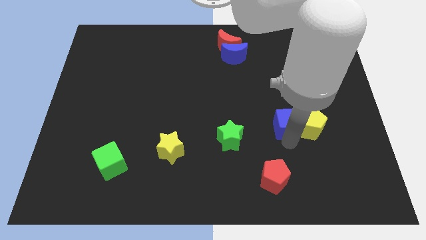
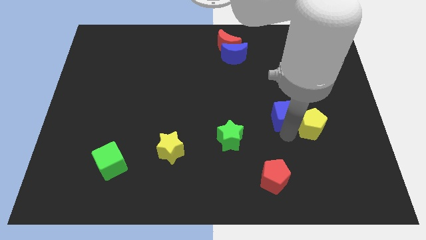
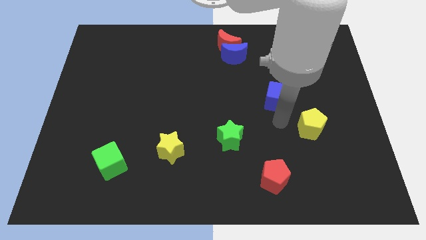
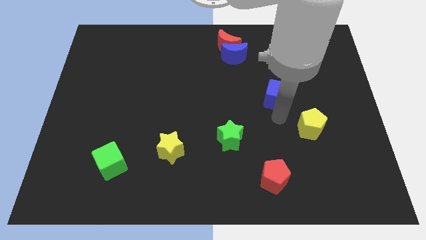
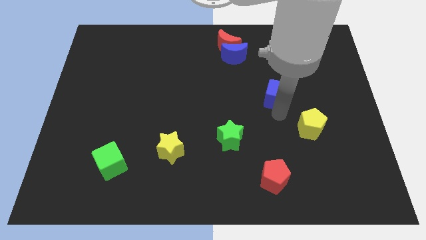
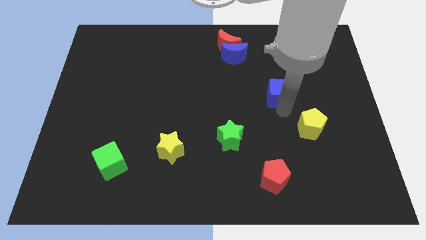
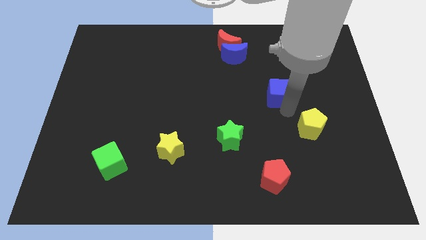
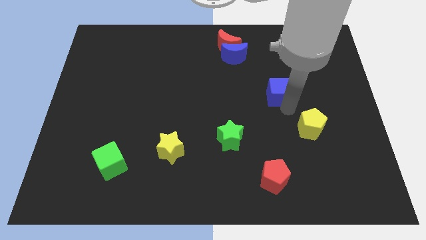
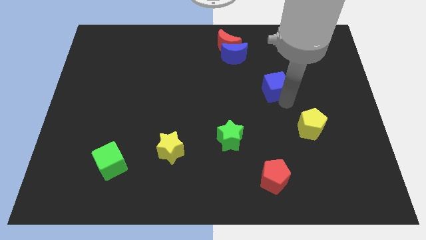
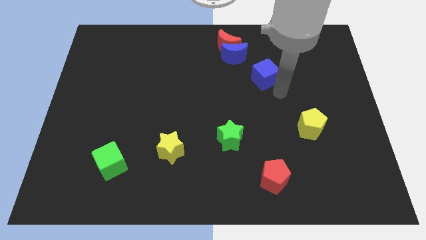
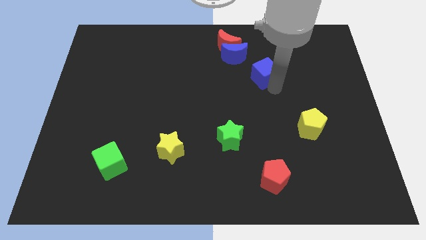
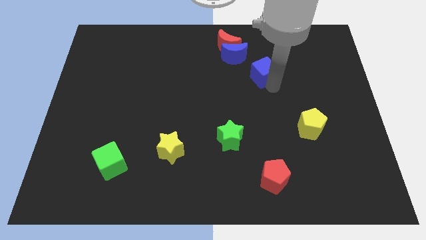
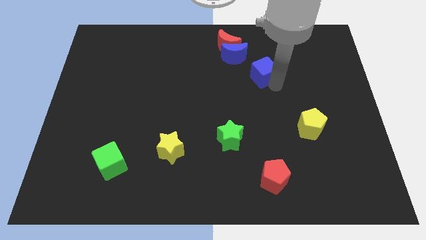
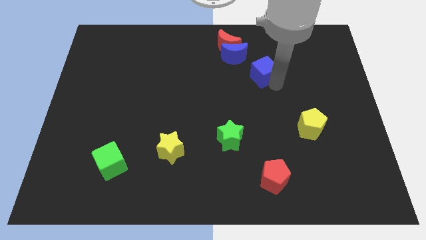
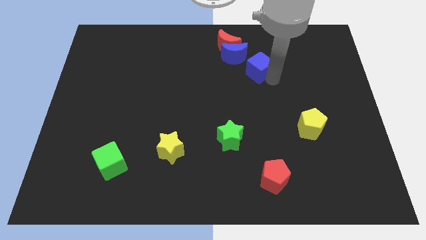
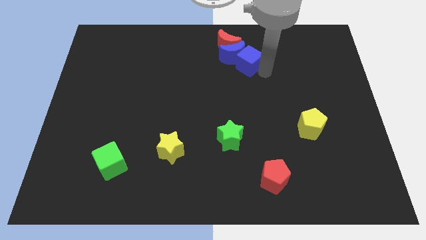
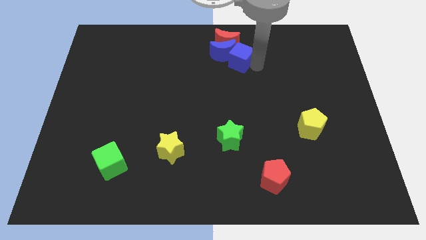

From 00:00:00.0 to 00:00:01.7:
push the blue cube into the blue crescent

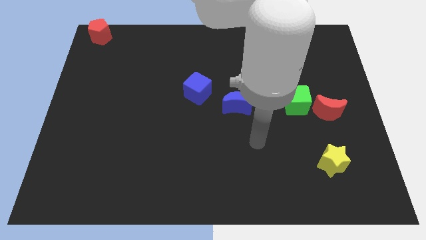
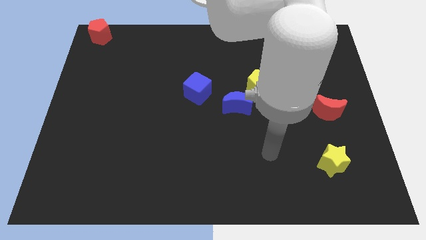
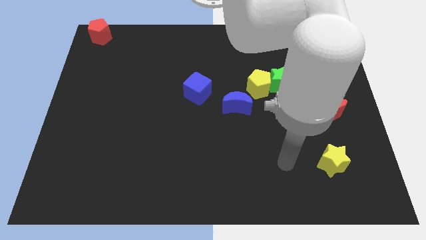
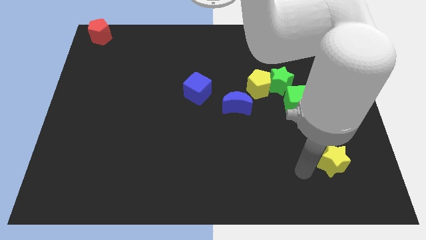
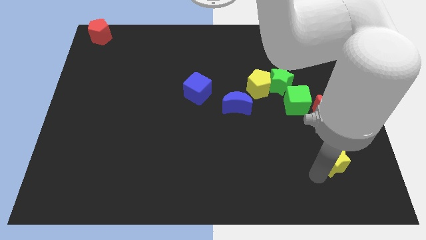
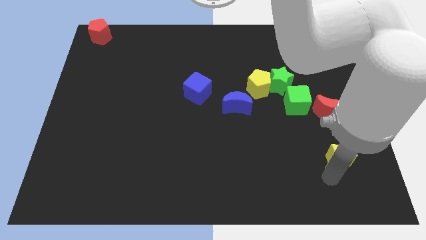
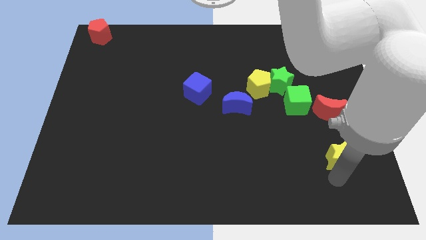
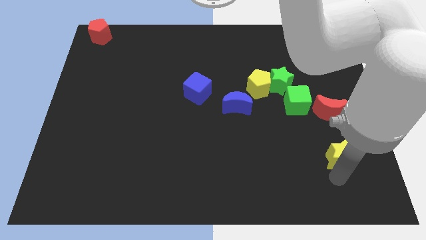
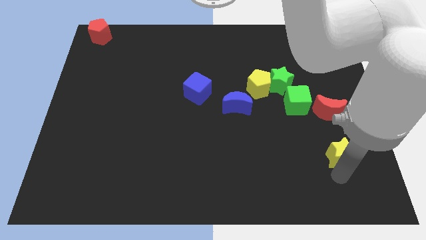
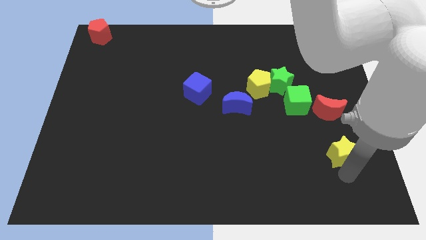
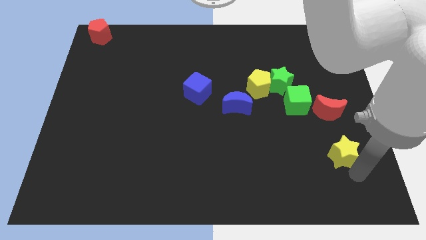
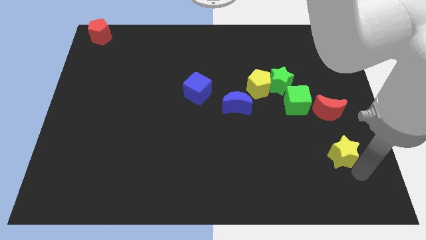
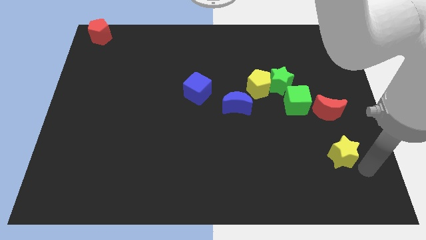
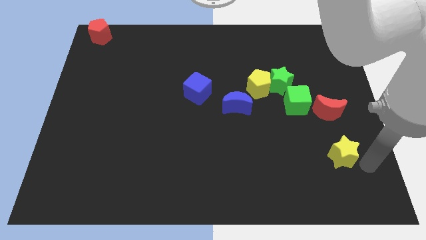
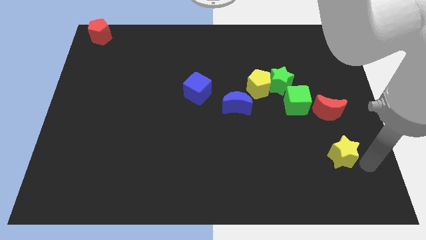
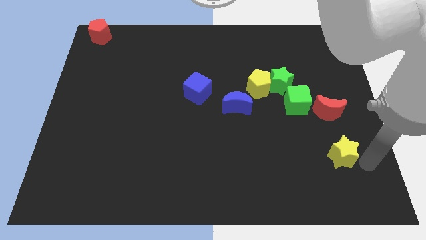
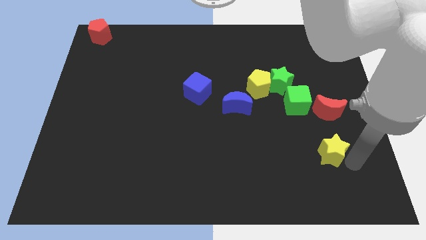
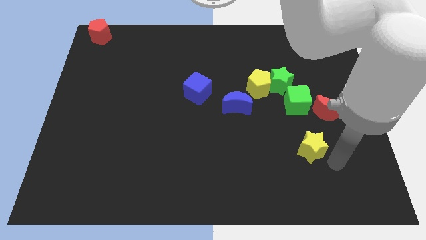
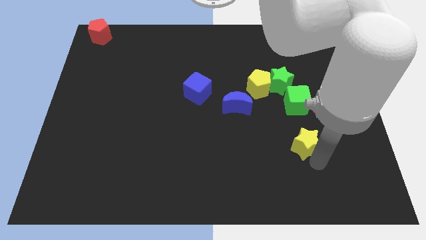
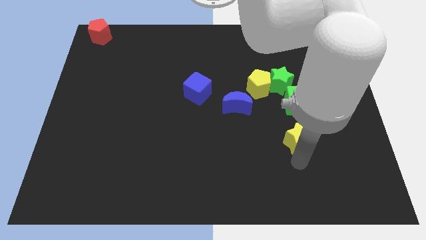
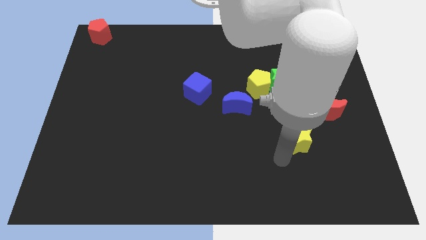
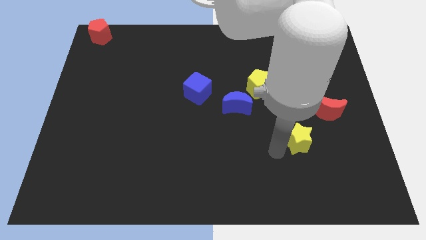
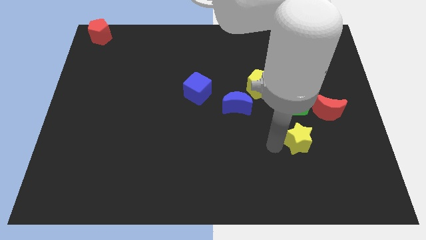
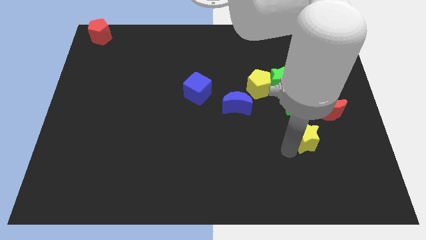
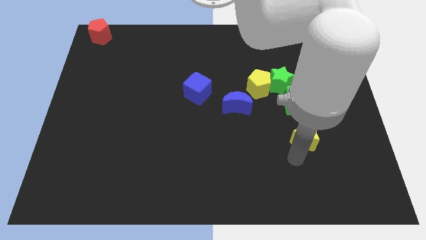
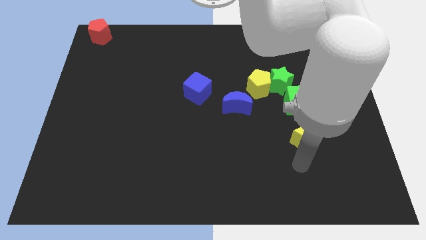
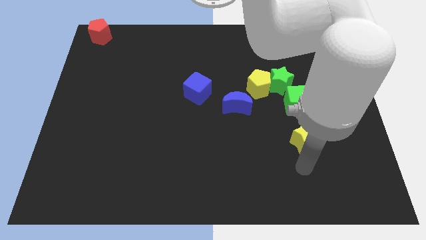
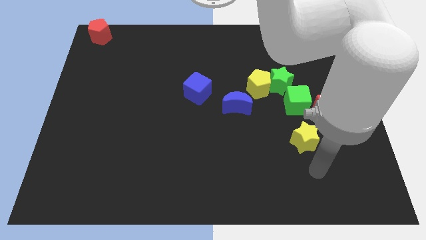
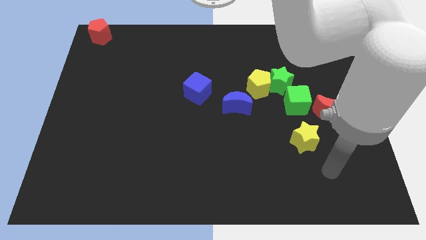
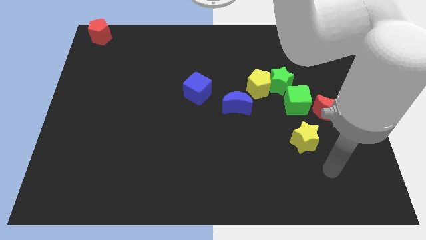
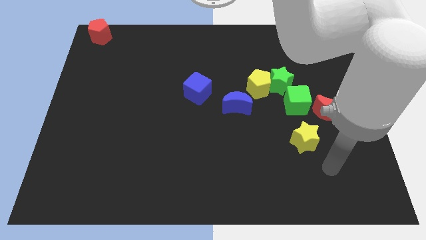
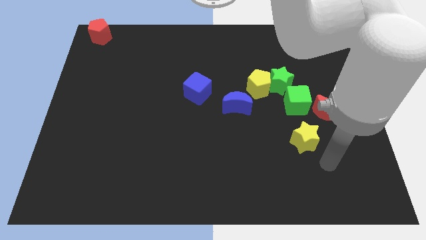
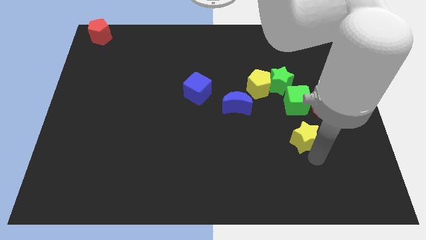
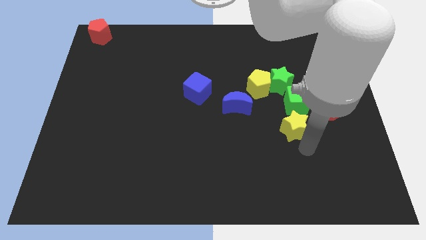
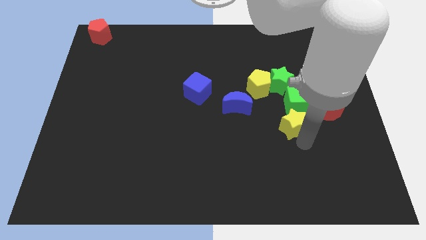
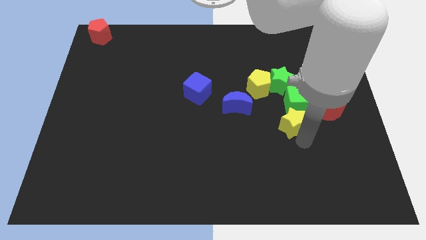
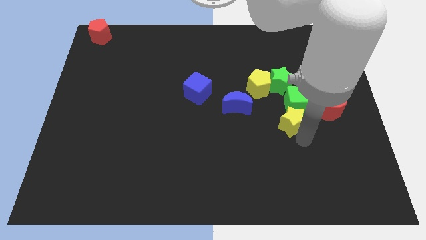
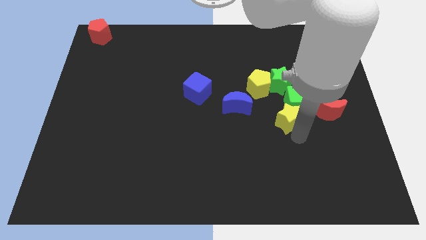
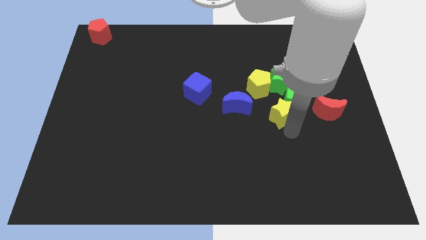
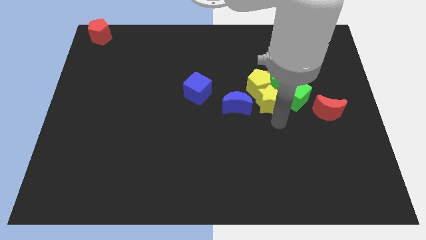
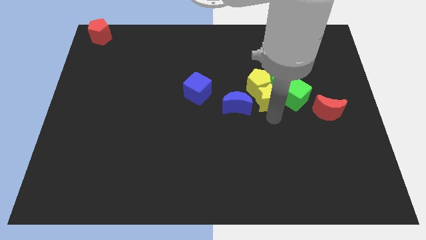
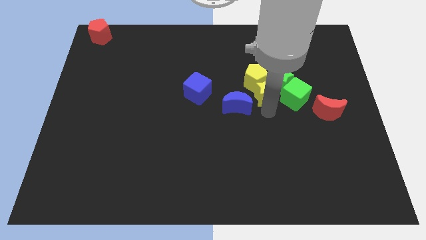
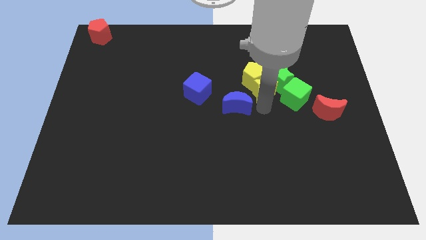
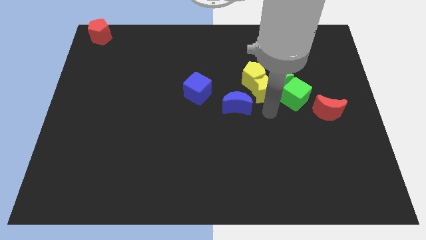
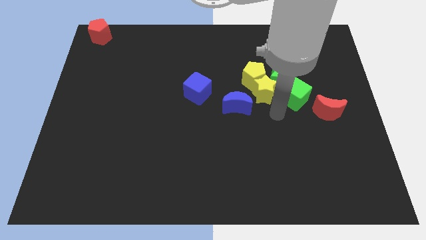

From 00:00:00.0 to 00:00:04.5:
push the yellow star into yellow pentagon

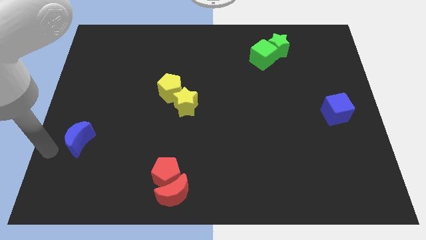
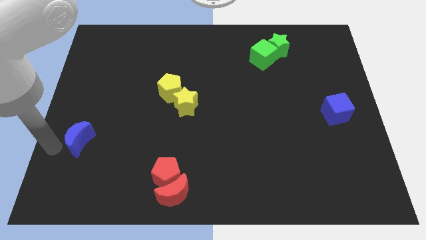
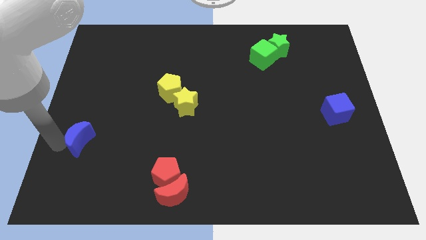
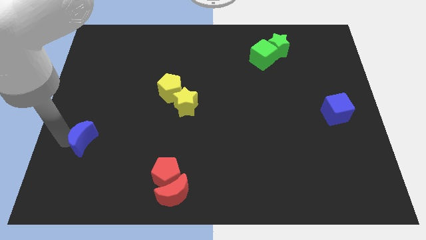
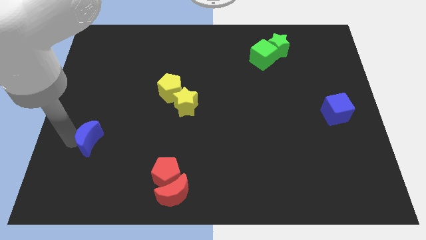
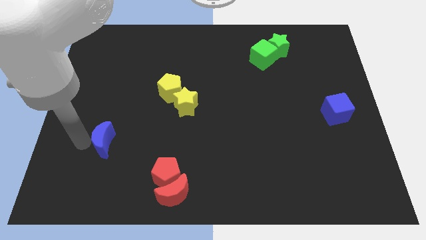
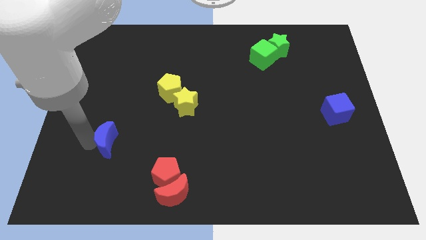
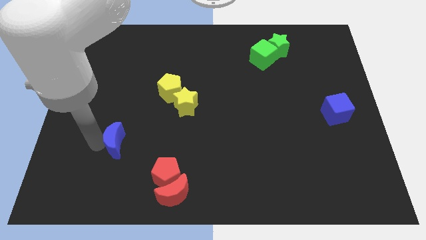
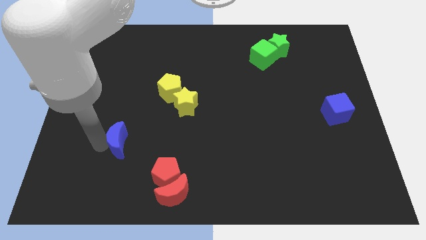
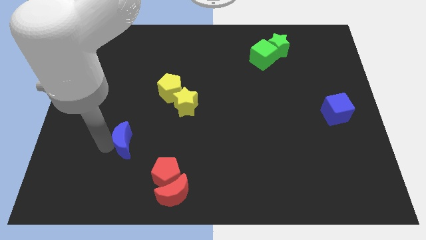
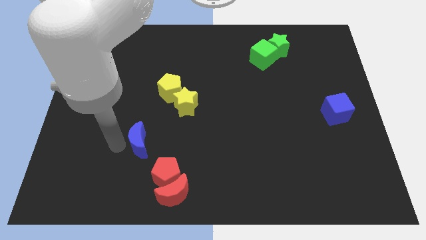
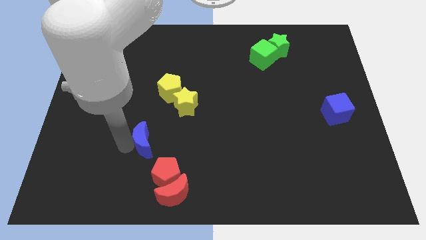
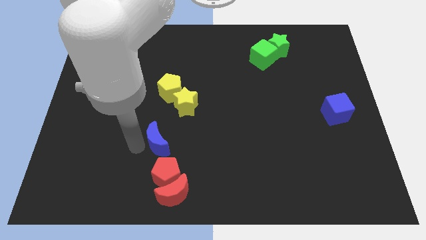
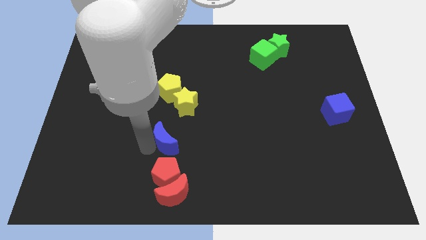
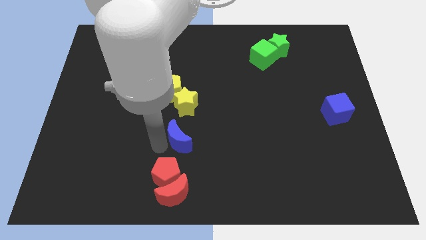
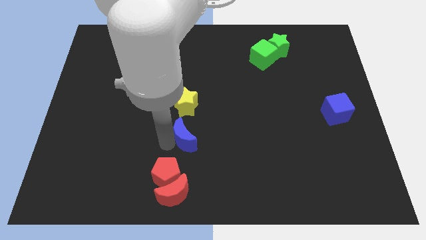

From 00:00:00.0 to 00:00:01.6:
move the blue moon to the bottom of the yellow star

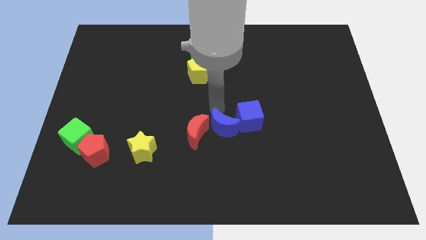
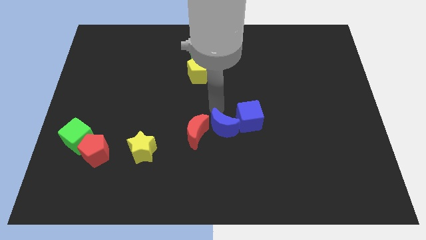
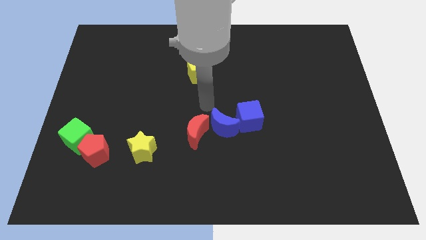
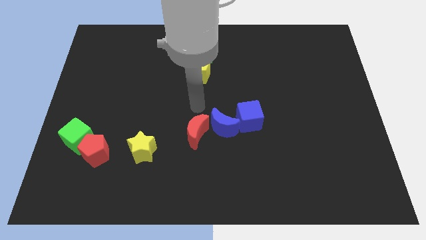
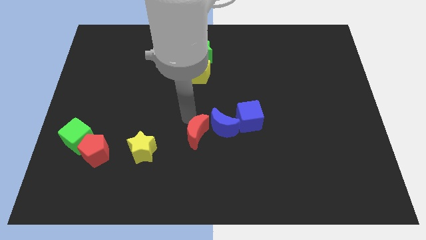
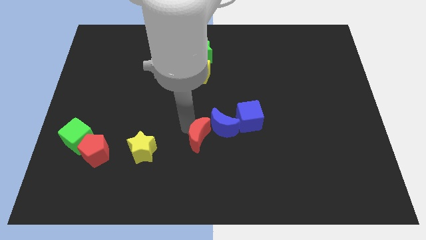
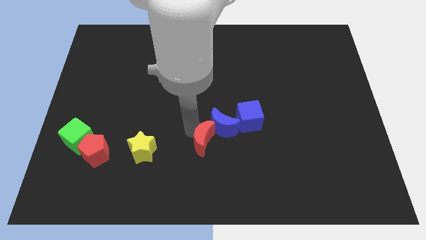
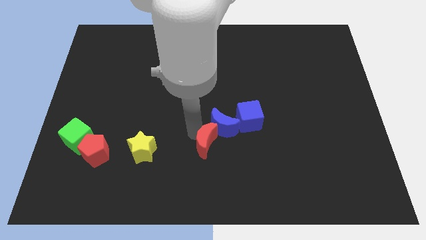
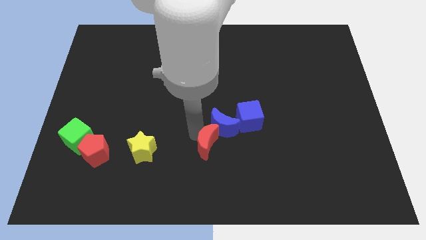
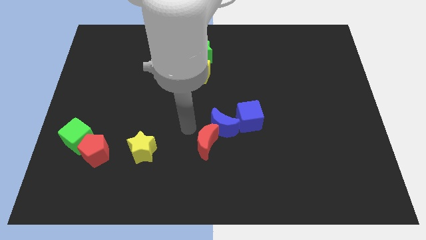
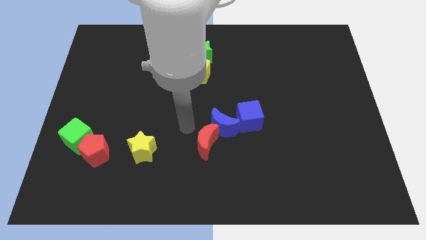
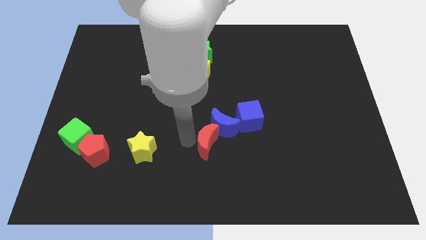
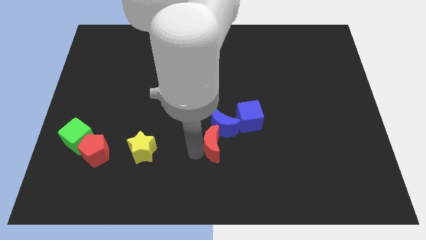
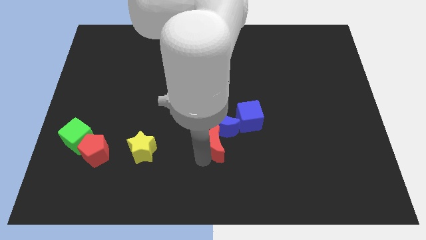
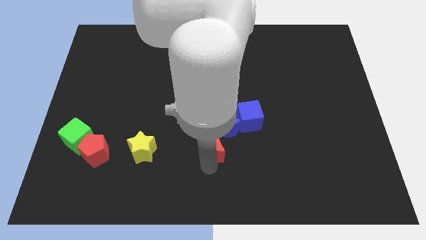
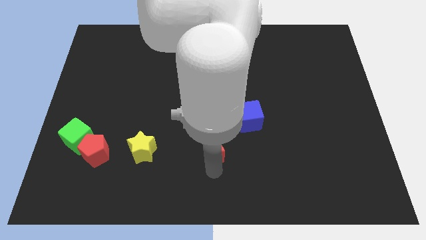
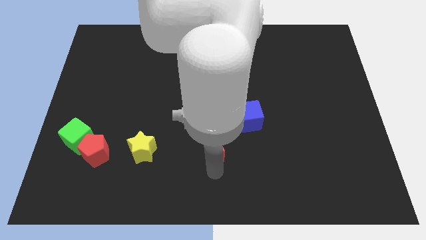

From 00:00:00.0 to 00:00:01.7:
move the red crescent below the blue crescent
